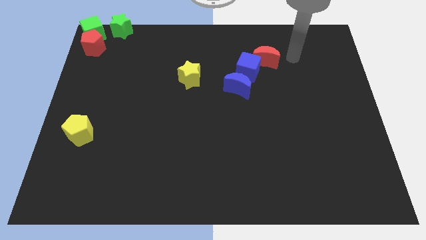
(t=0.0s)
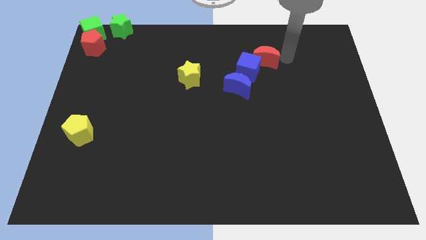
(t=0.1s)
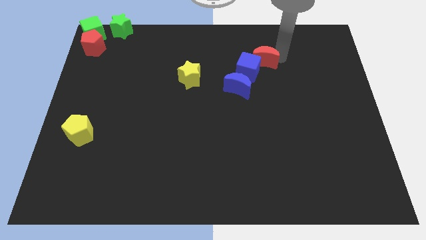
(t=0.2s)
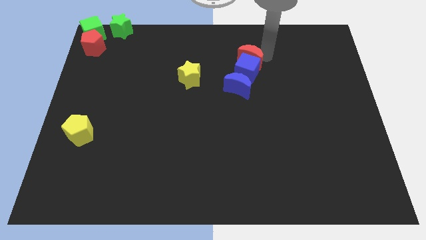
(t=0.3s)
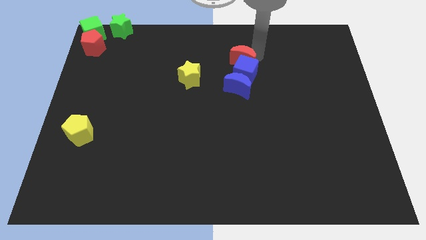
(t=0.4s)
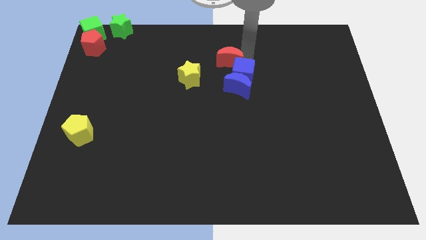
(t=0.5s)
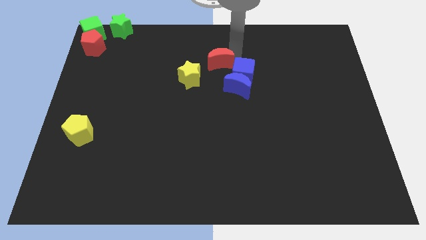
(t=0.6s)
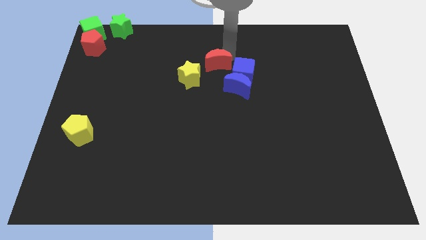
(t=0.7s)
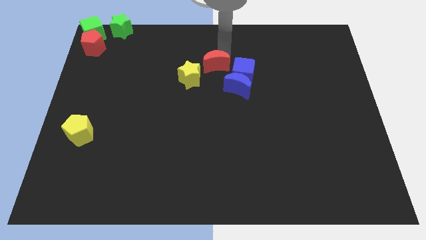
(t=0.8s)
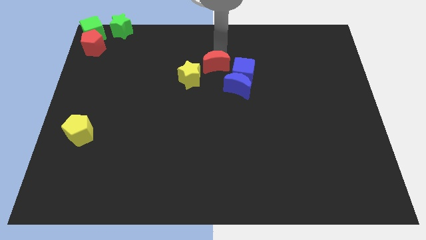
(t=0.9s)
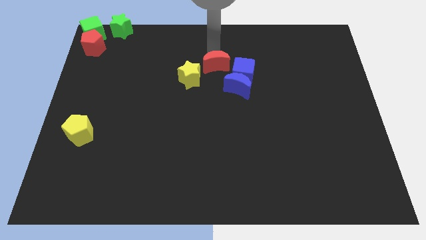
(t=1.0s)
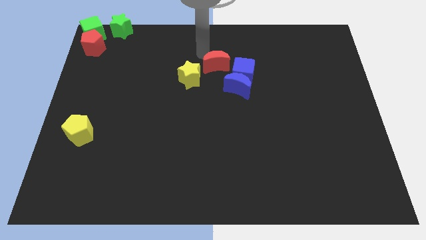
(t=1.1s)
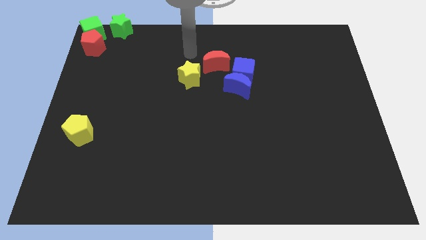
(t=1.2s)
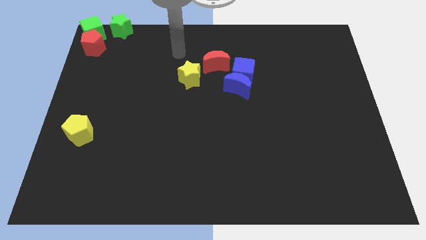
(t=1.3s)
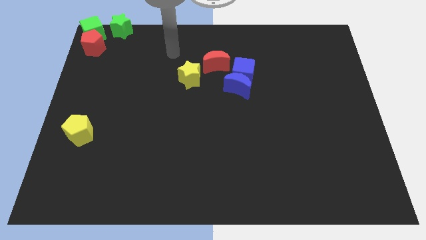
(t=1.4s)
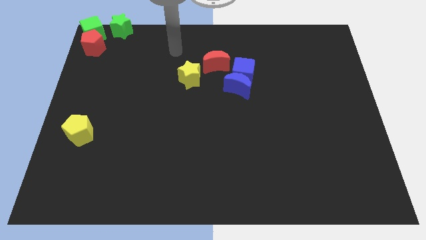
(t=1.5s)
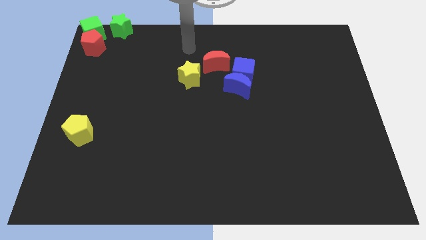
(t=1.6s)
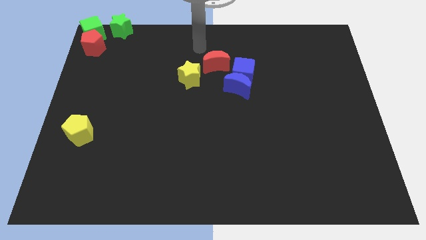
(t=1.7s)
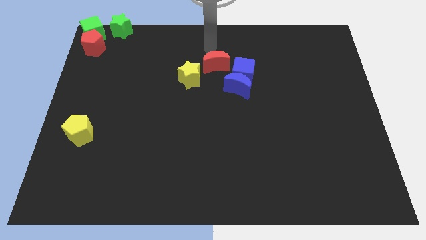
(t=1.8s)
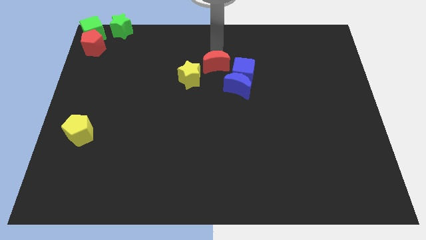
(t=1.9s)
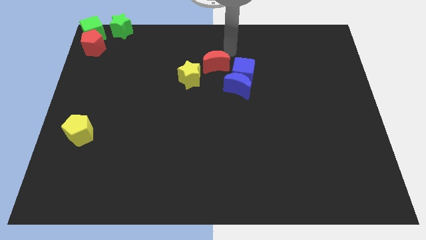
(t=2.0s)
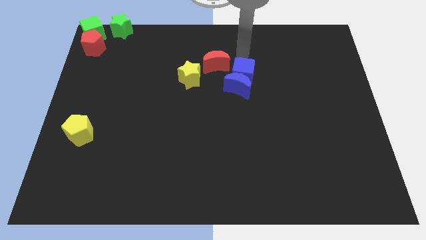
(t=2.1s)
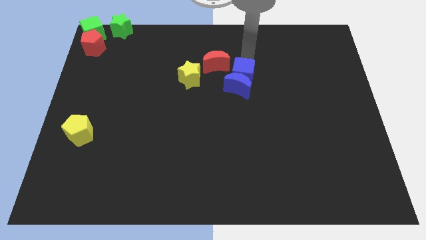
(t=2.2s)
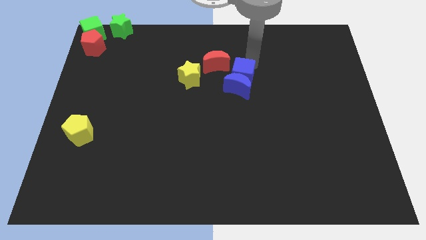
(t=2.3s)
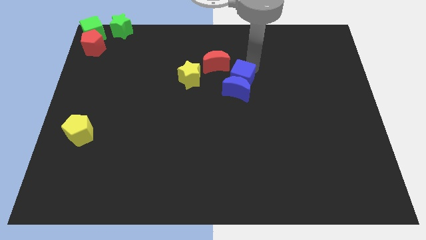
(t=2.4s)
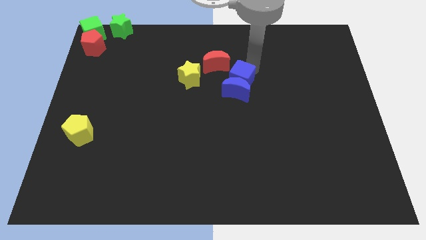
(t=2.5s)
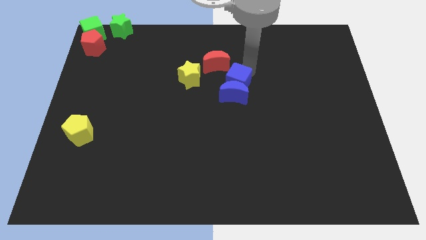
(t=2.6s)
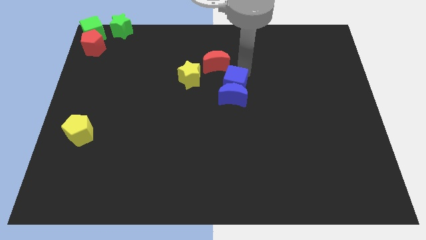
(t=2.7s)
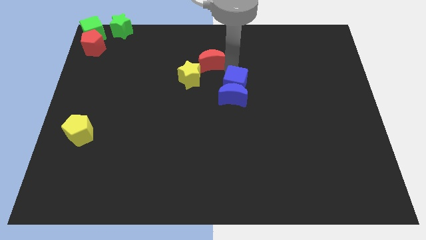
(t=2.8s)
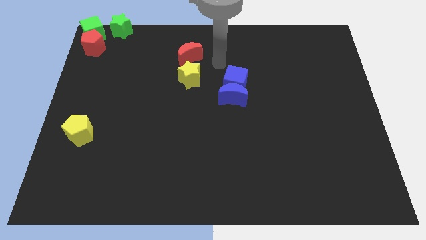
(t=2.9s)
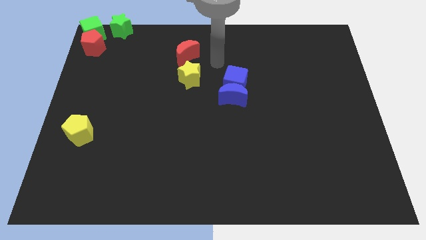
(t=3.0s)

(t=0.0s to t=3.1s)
push the red crescent to the top of the yellow star

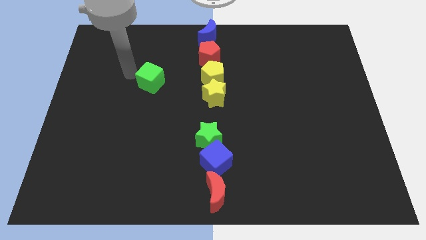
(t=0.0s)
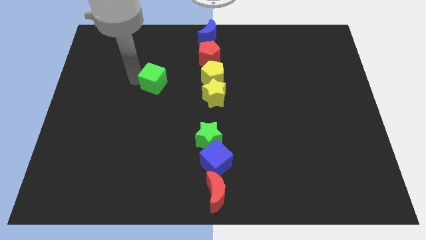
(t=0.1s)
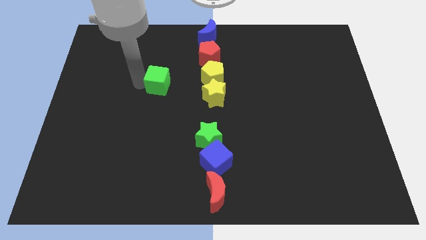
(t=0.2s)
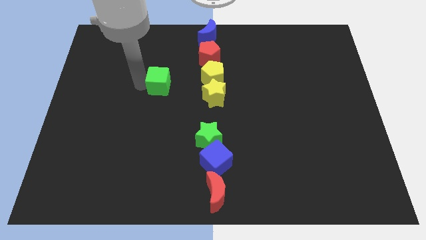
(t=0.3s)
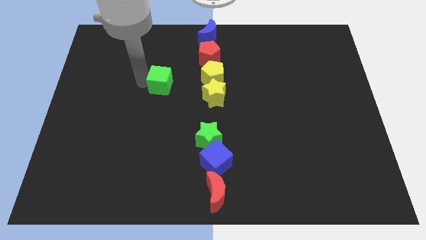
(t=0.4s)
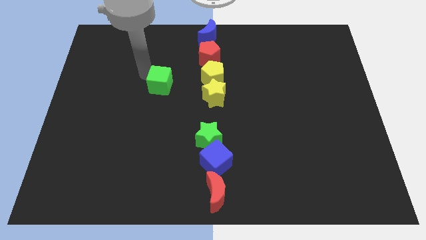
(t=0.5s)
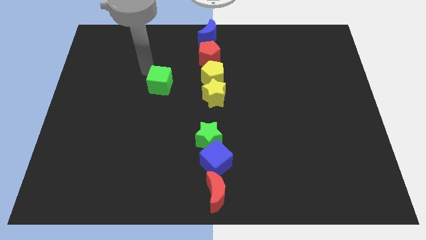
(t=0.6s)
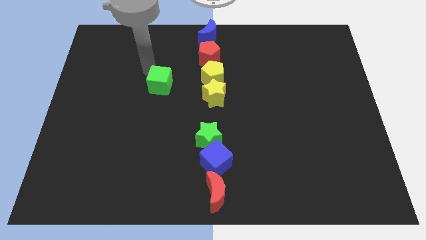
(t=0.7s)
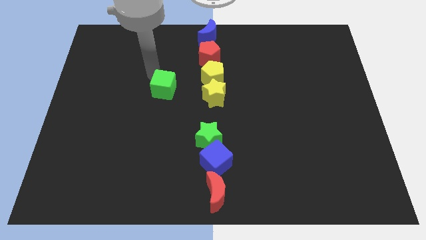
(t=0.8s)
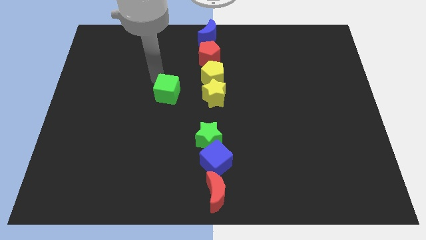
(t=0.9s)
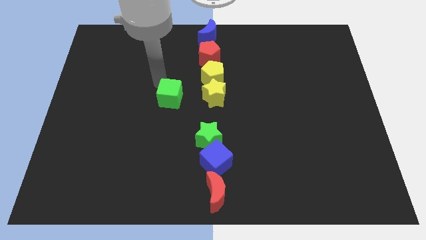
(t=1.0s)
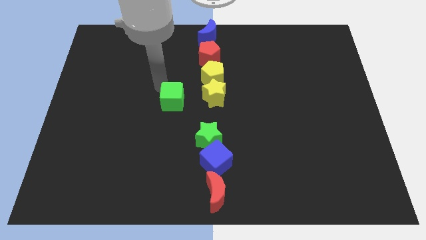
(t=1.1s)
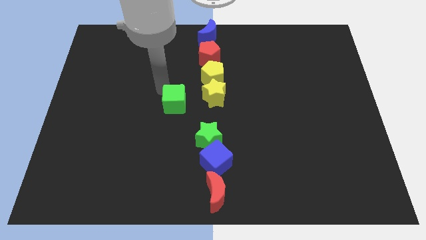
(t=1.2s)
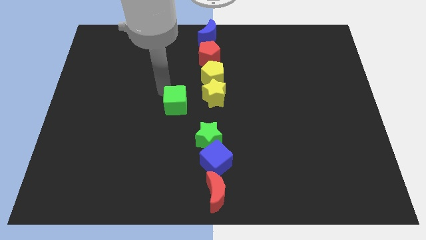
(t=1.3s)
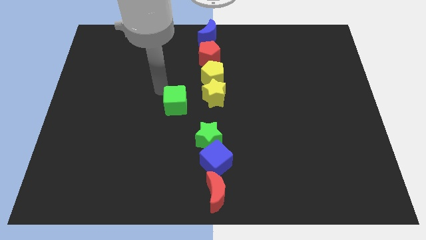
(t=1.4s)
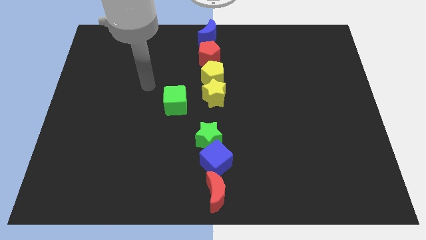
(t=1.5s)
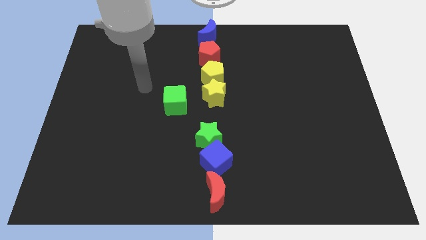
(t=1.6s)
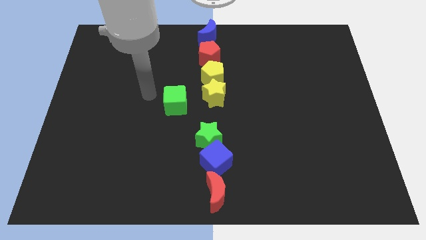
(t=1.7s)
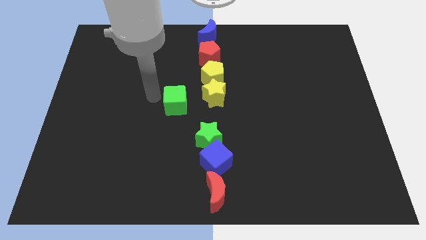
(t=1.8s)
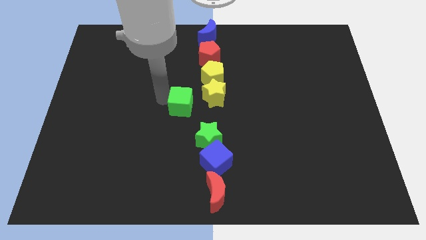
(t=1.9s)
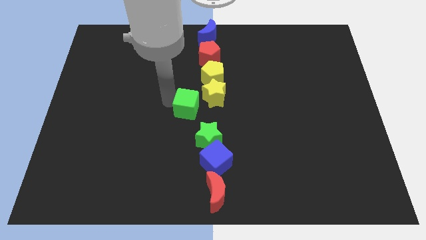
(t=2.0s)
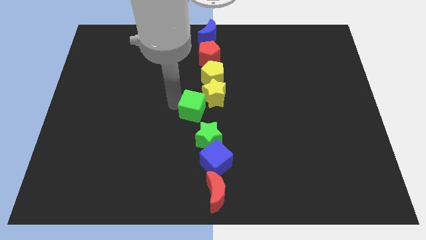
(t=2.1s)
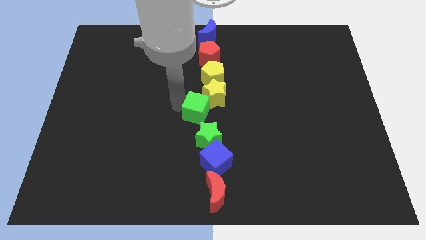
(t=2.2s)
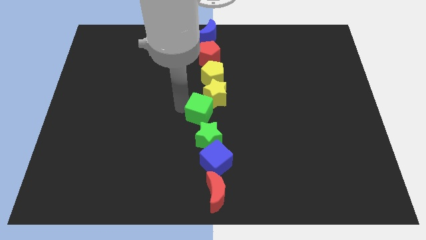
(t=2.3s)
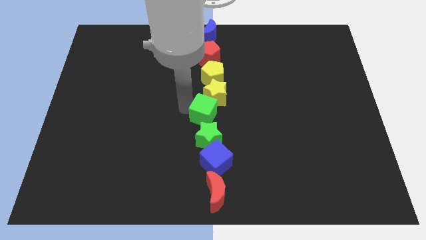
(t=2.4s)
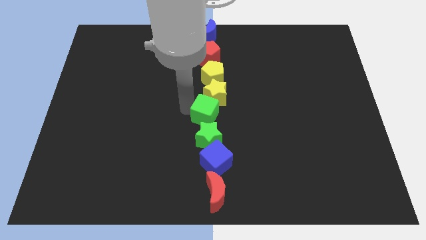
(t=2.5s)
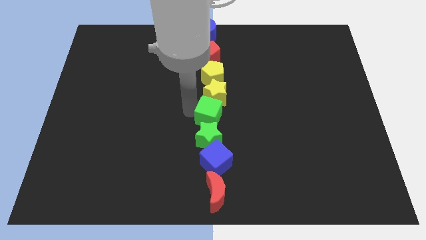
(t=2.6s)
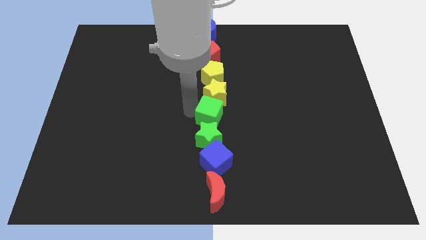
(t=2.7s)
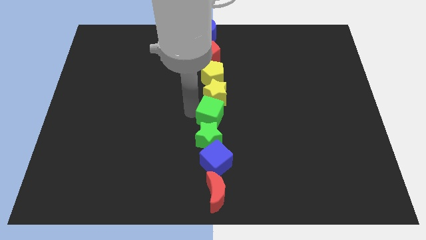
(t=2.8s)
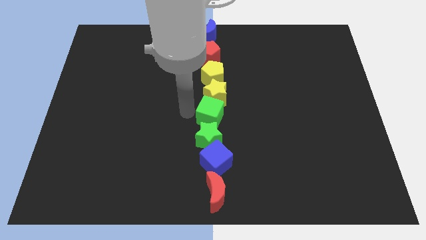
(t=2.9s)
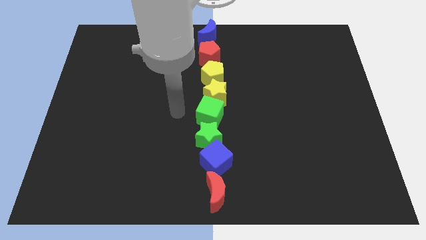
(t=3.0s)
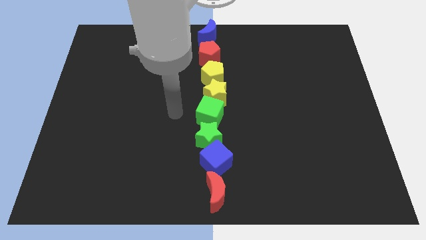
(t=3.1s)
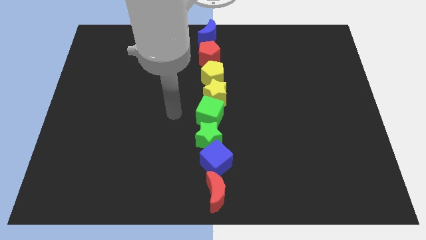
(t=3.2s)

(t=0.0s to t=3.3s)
place the green cube in between the yellow star and green star

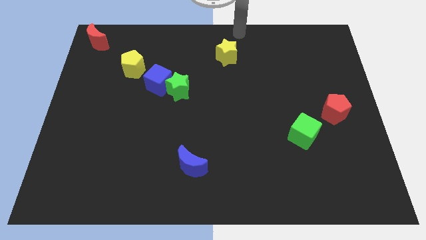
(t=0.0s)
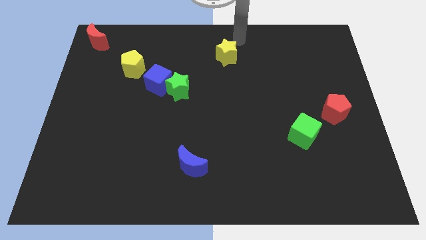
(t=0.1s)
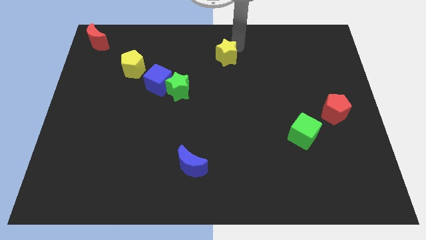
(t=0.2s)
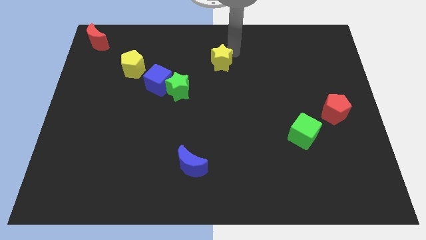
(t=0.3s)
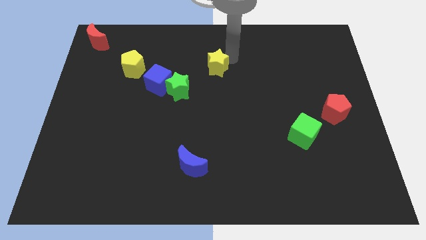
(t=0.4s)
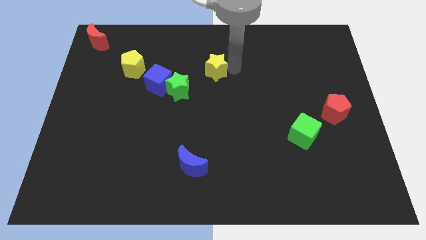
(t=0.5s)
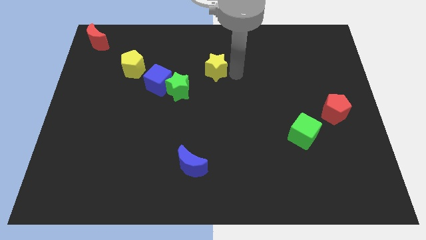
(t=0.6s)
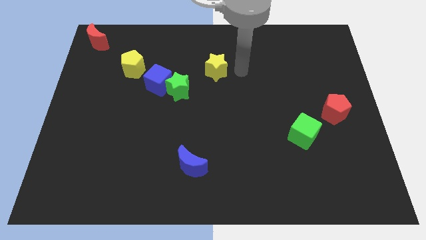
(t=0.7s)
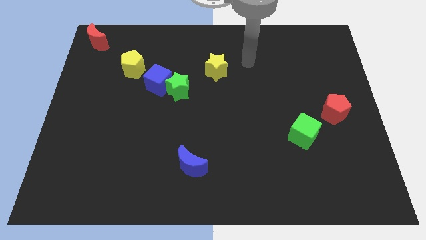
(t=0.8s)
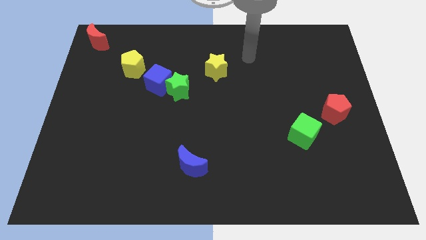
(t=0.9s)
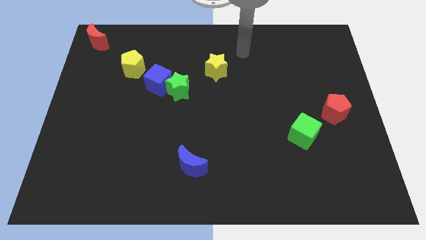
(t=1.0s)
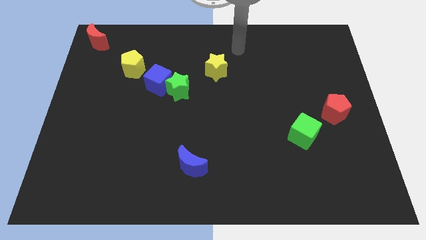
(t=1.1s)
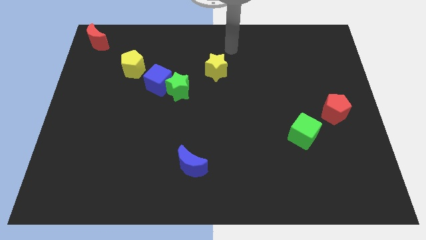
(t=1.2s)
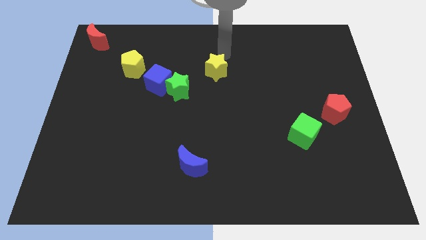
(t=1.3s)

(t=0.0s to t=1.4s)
move the yellow star diagonally above the green star

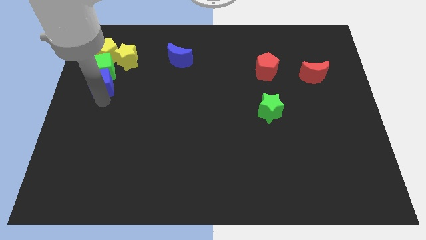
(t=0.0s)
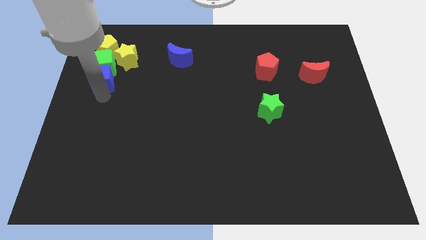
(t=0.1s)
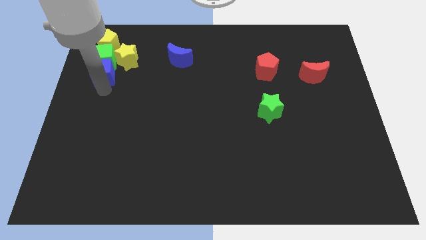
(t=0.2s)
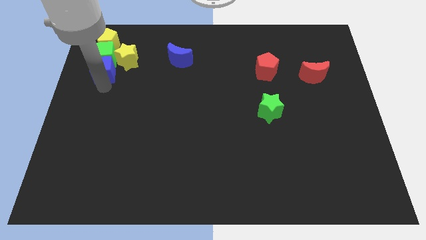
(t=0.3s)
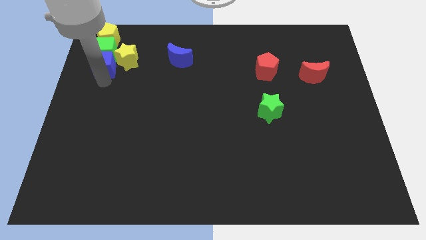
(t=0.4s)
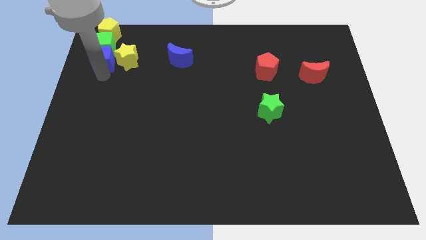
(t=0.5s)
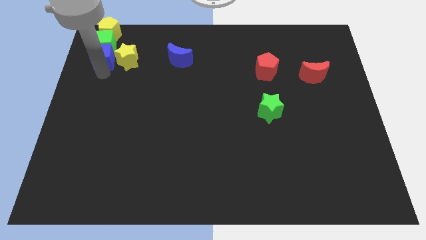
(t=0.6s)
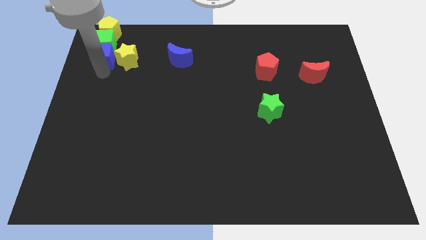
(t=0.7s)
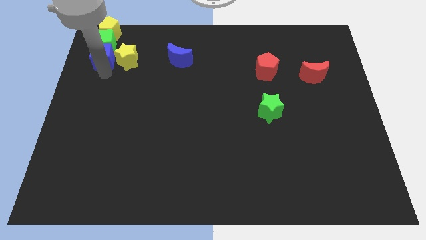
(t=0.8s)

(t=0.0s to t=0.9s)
push the group of blocks to the top left corner of the board

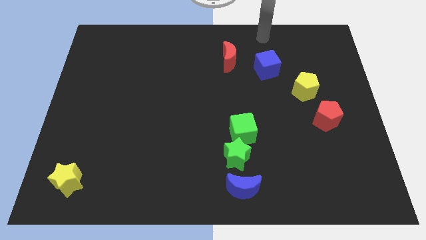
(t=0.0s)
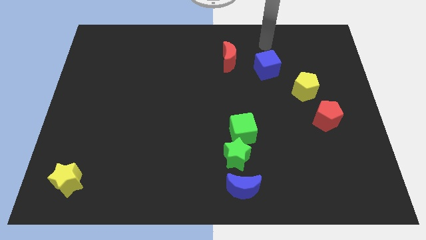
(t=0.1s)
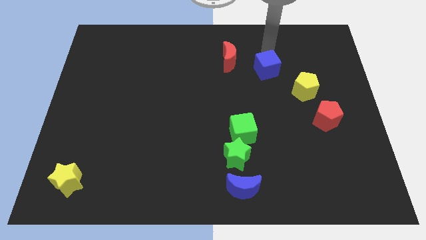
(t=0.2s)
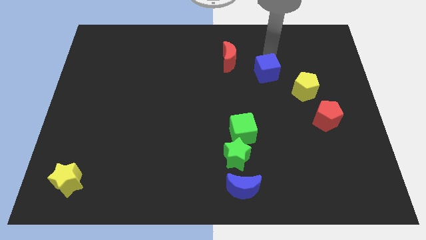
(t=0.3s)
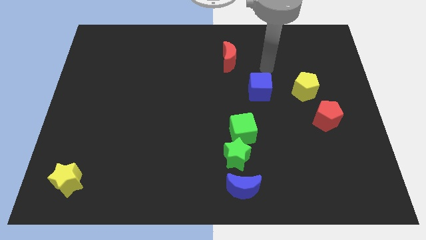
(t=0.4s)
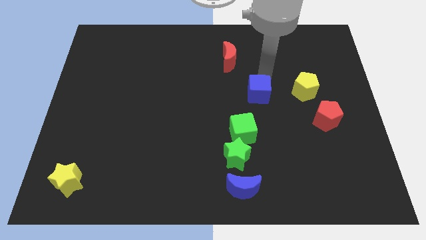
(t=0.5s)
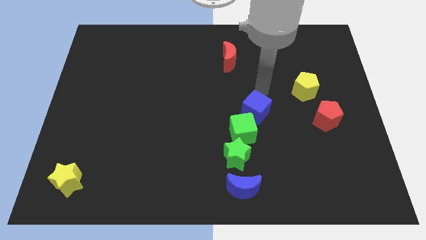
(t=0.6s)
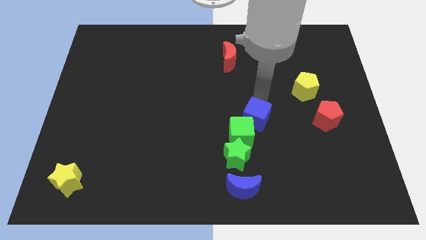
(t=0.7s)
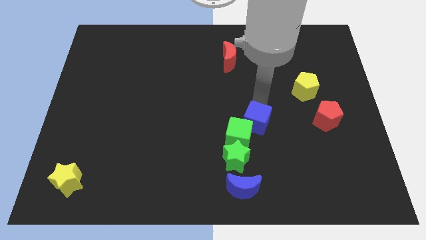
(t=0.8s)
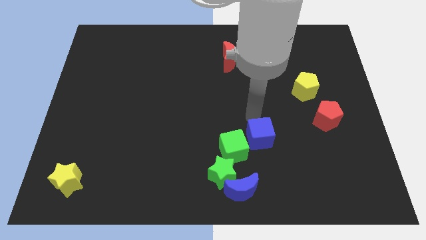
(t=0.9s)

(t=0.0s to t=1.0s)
push blue cube into the green cube
